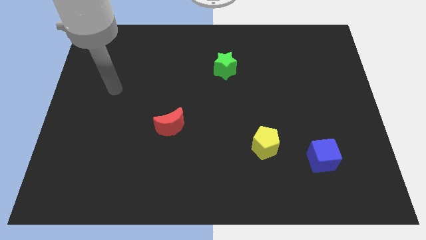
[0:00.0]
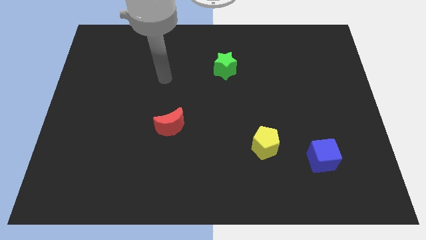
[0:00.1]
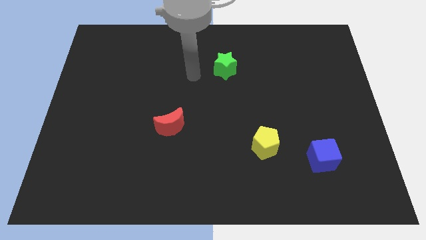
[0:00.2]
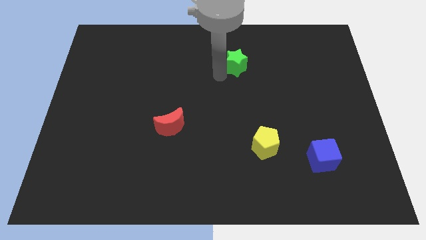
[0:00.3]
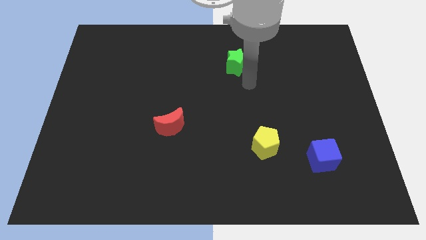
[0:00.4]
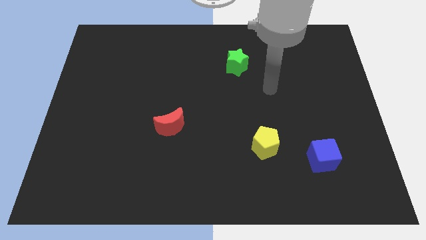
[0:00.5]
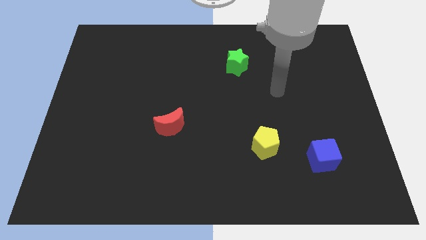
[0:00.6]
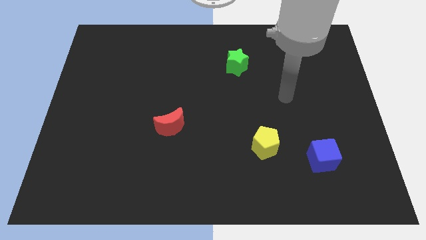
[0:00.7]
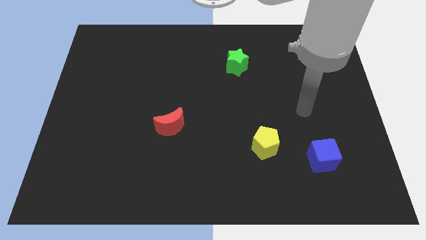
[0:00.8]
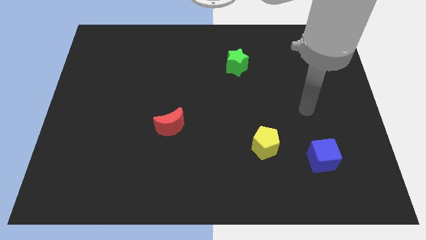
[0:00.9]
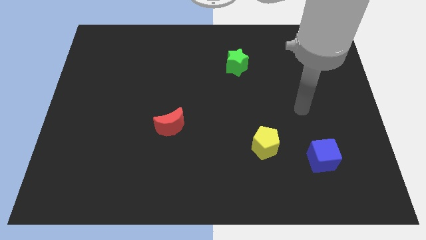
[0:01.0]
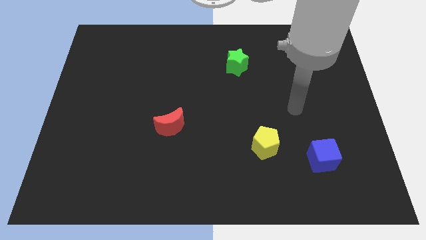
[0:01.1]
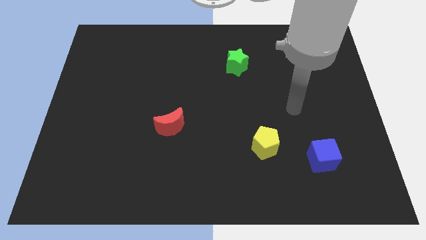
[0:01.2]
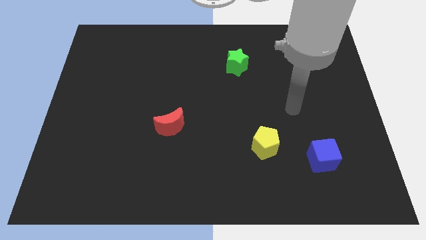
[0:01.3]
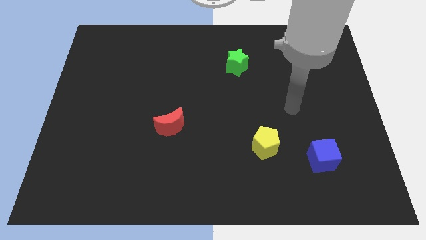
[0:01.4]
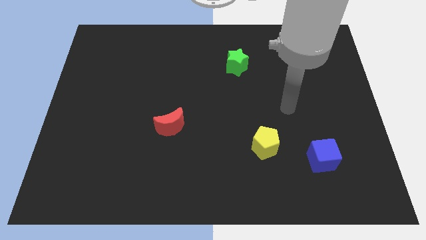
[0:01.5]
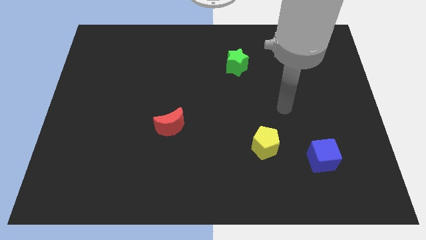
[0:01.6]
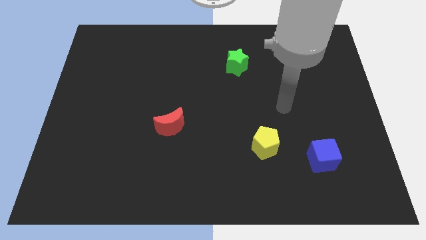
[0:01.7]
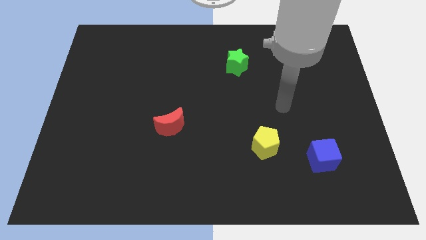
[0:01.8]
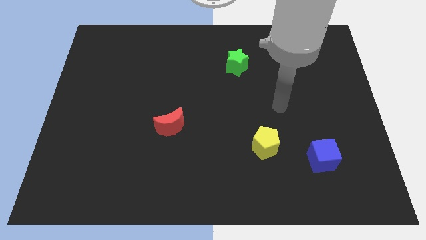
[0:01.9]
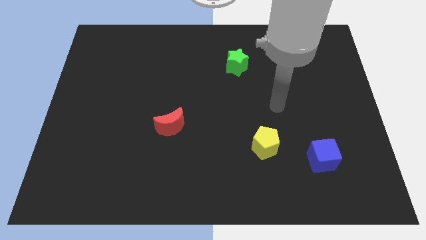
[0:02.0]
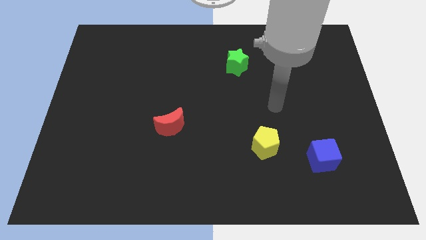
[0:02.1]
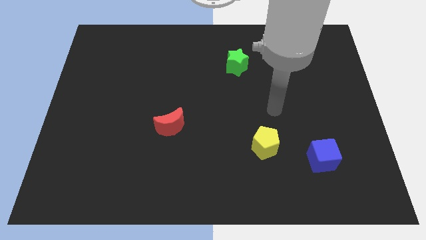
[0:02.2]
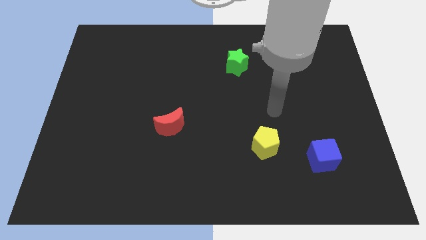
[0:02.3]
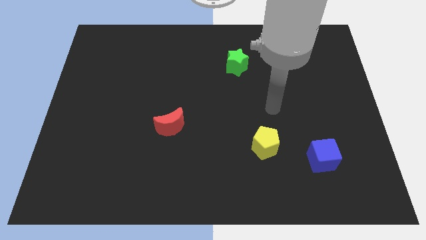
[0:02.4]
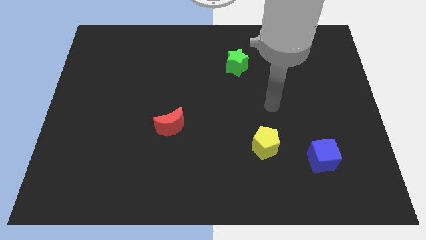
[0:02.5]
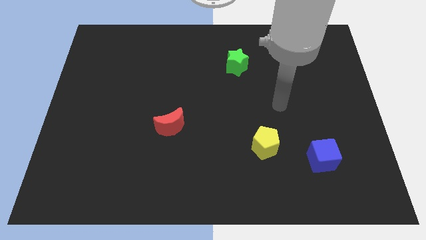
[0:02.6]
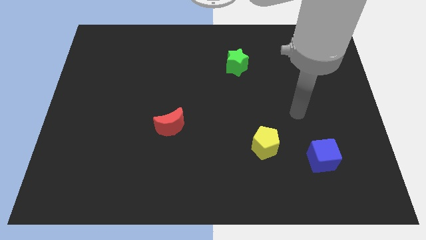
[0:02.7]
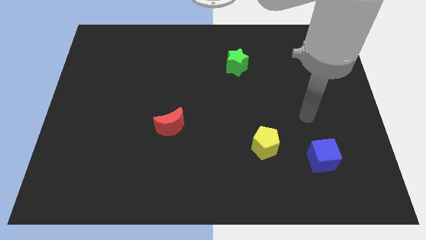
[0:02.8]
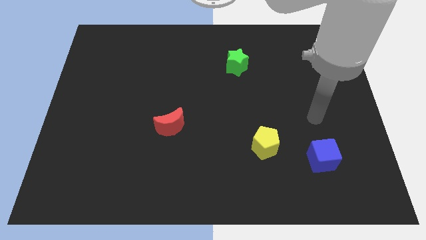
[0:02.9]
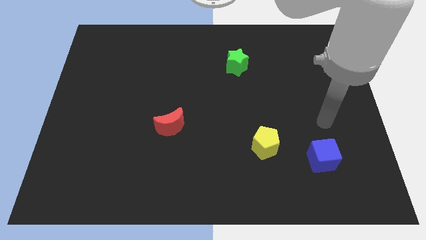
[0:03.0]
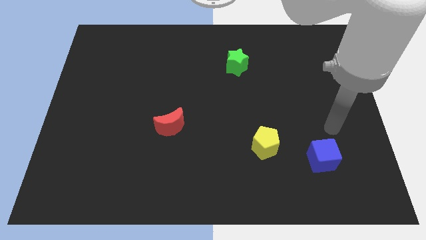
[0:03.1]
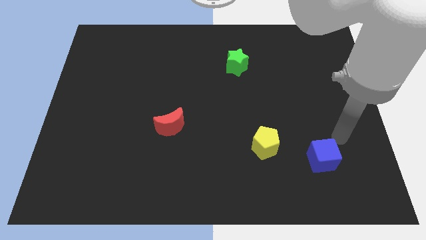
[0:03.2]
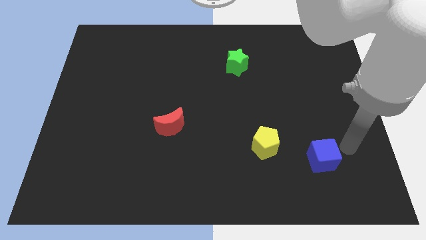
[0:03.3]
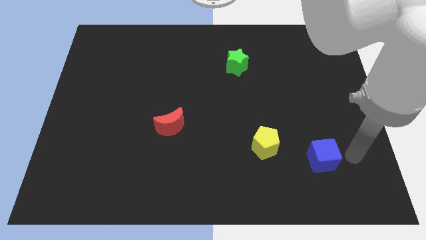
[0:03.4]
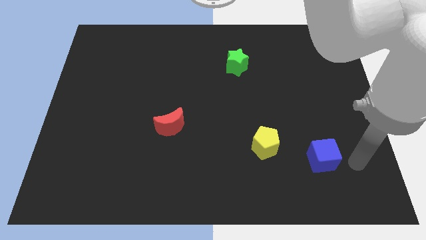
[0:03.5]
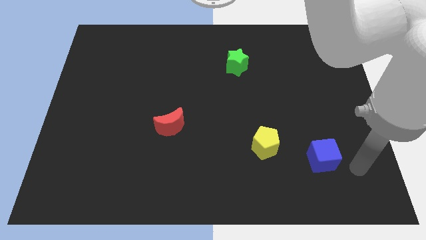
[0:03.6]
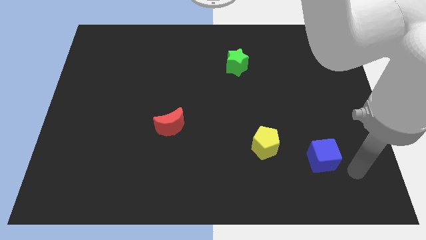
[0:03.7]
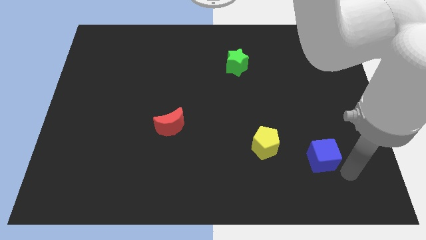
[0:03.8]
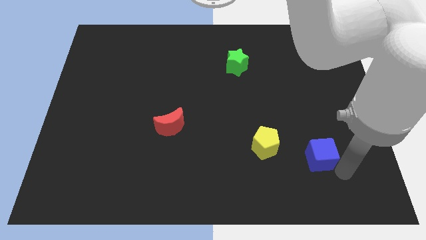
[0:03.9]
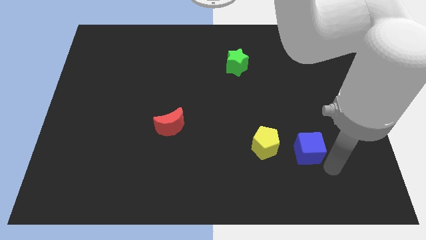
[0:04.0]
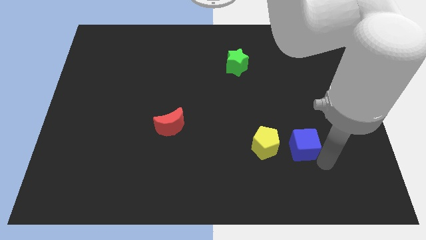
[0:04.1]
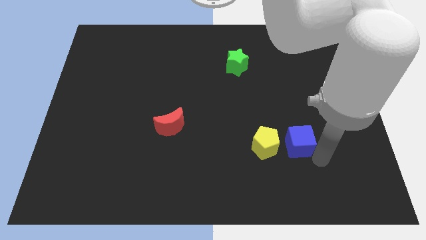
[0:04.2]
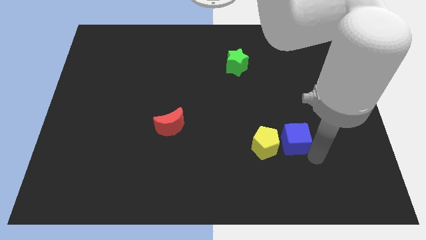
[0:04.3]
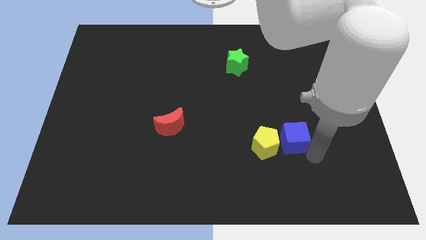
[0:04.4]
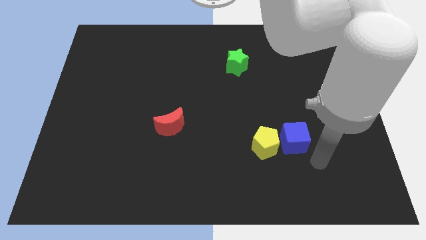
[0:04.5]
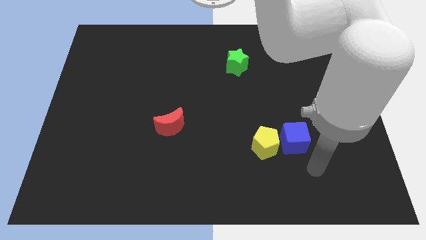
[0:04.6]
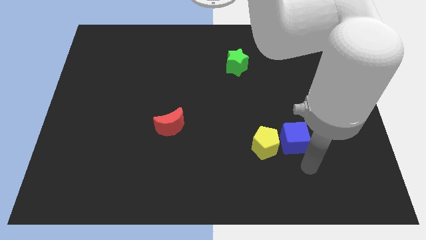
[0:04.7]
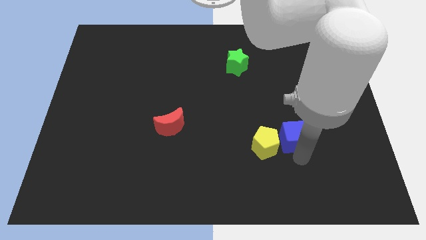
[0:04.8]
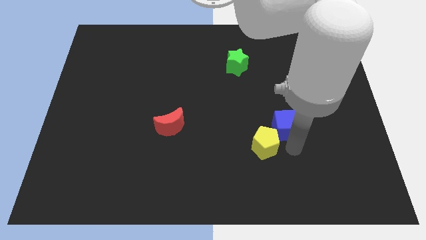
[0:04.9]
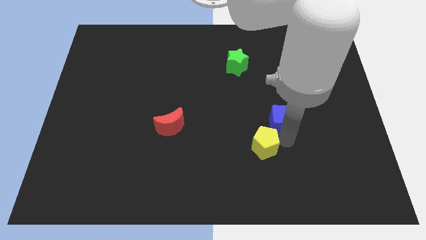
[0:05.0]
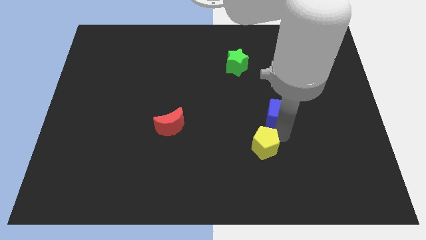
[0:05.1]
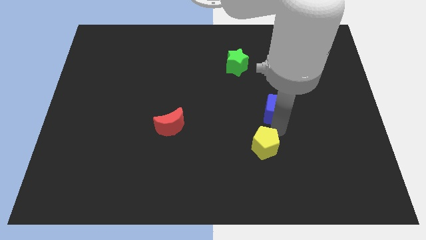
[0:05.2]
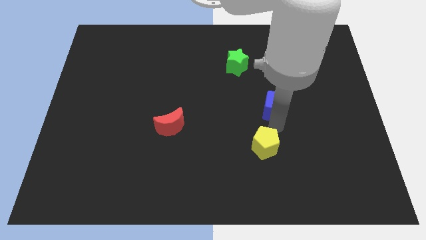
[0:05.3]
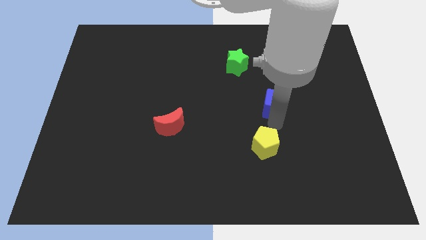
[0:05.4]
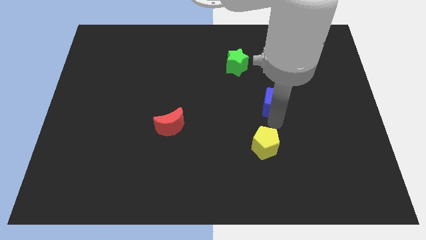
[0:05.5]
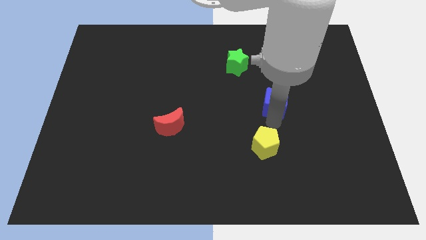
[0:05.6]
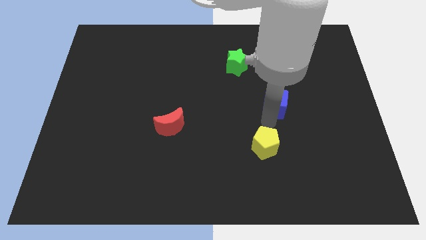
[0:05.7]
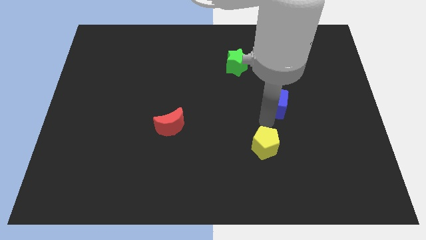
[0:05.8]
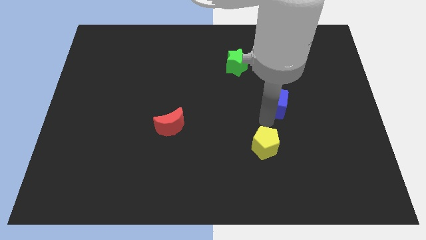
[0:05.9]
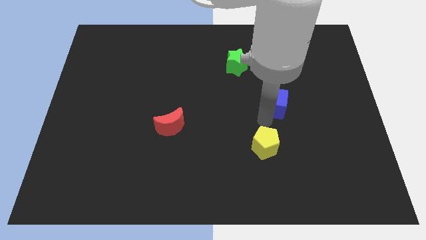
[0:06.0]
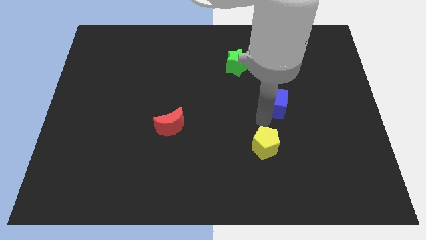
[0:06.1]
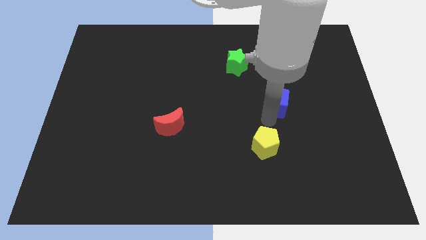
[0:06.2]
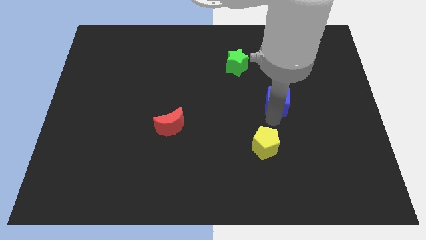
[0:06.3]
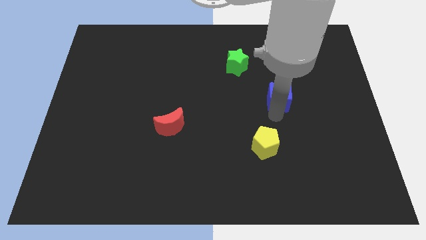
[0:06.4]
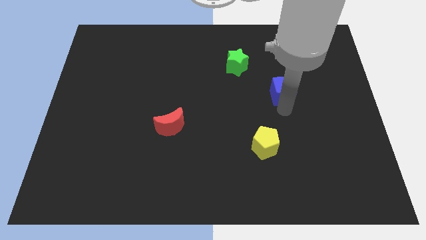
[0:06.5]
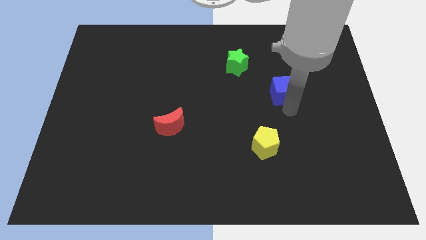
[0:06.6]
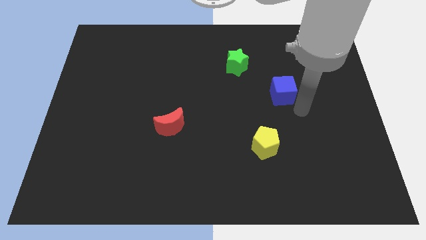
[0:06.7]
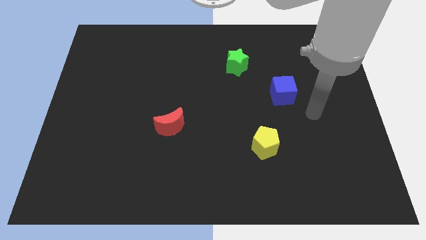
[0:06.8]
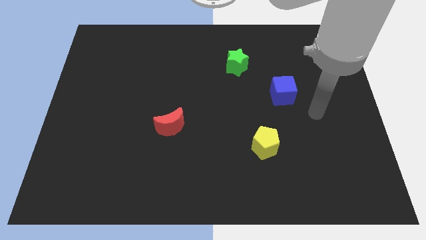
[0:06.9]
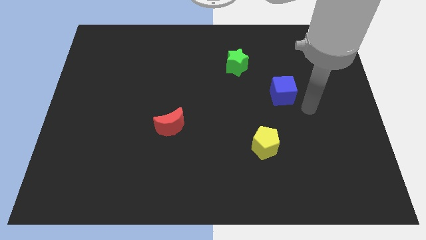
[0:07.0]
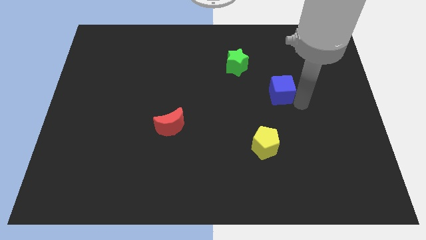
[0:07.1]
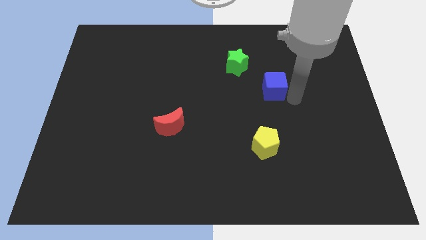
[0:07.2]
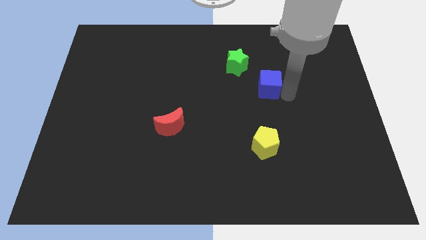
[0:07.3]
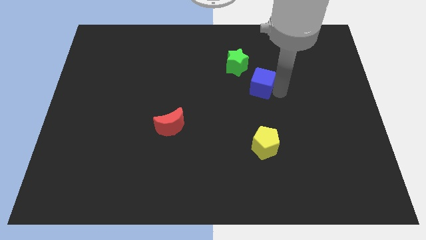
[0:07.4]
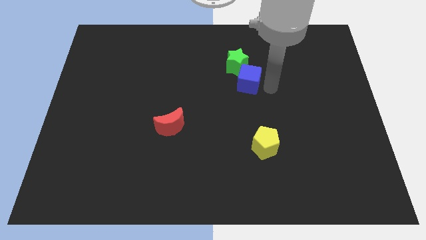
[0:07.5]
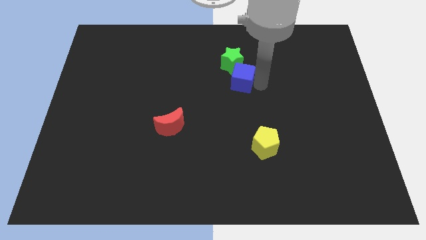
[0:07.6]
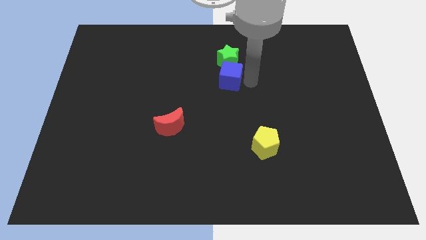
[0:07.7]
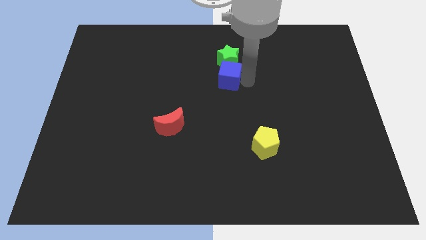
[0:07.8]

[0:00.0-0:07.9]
slide the blue block to the green star

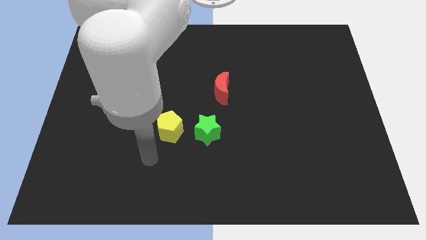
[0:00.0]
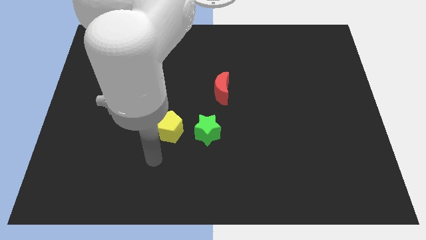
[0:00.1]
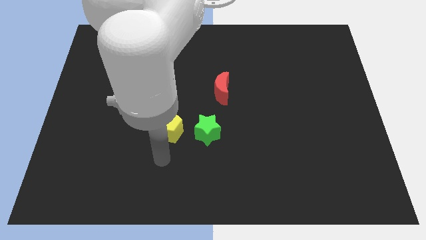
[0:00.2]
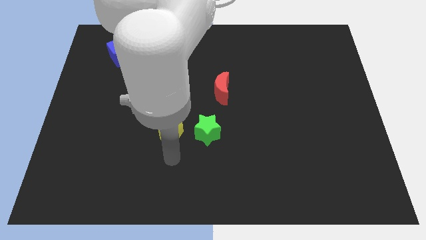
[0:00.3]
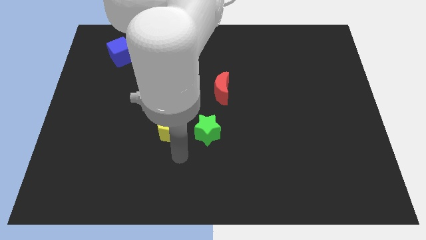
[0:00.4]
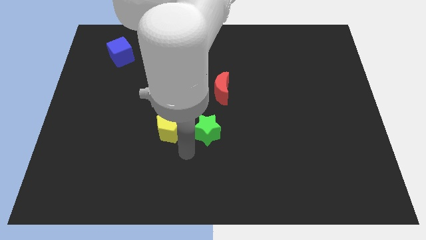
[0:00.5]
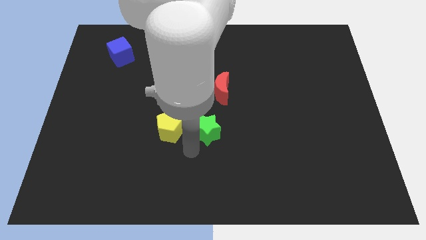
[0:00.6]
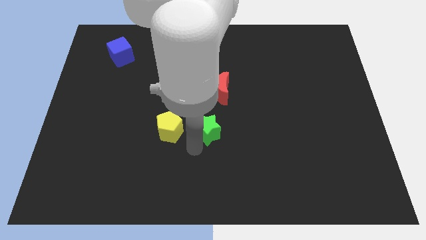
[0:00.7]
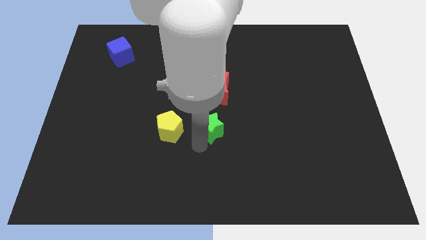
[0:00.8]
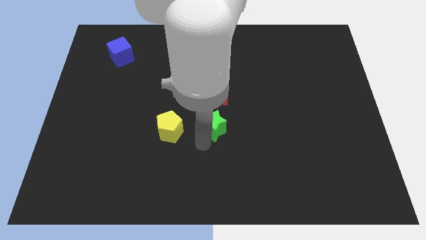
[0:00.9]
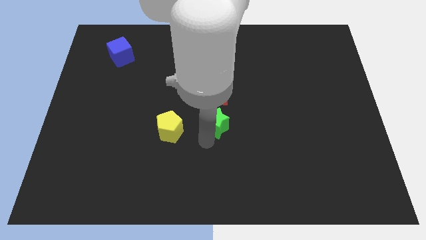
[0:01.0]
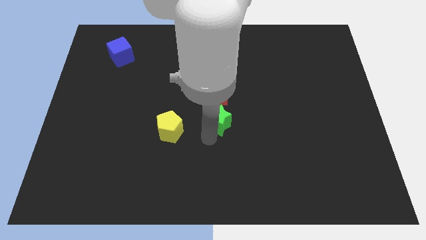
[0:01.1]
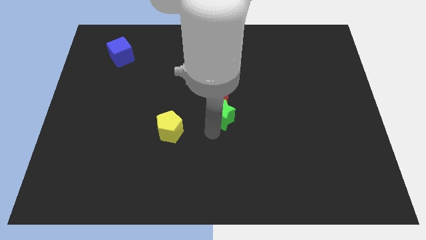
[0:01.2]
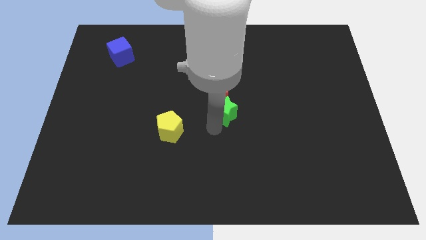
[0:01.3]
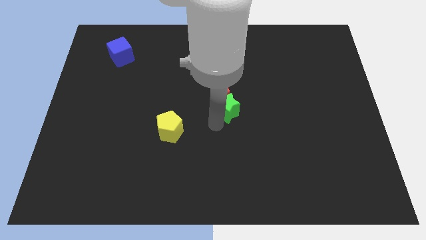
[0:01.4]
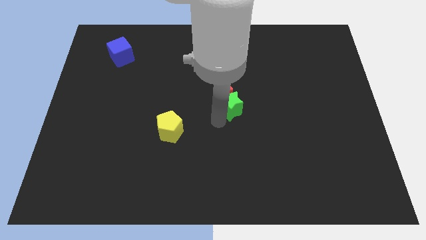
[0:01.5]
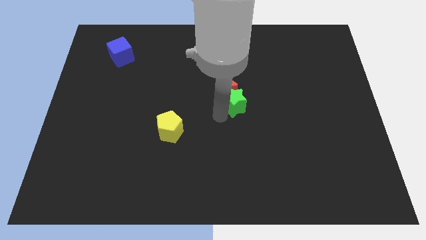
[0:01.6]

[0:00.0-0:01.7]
move the green block to the red block
